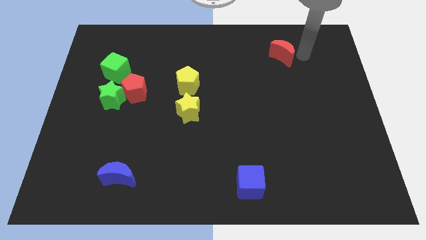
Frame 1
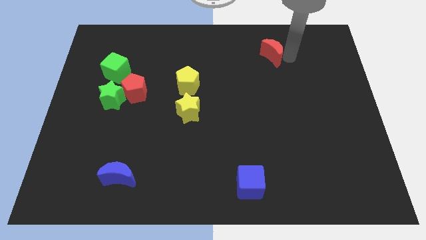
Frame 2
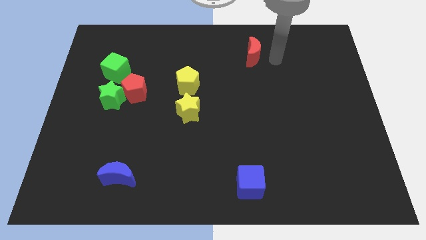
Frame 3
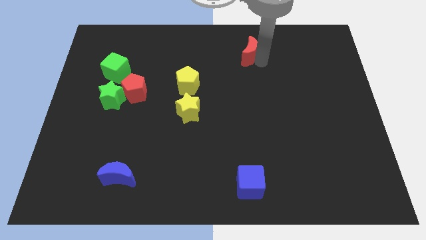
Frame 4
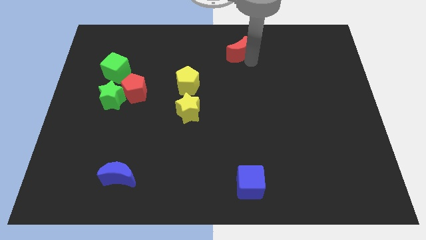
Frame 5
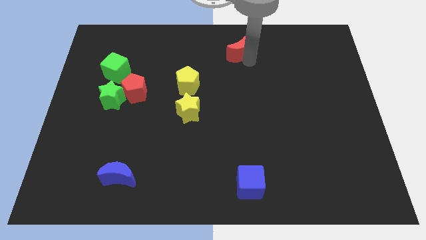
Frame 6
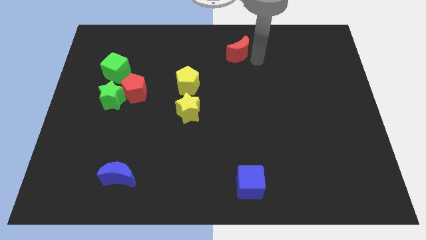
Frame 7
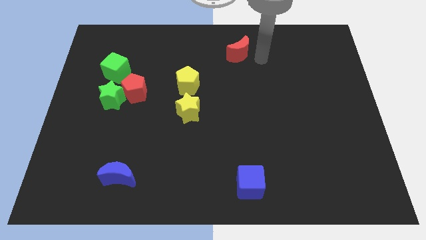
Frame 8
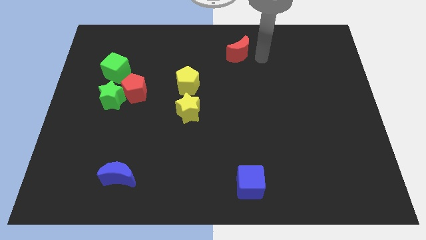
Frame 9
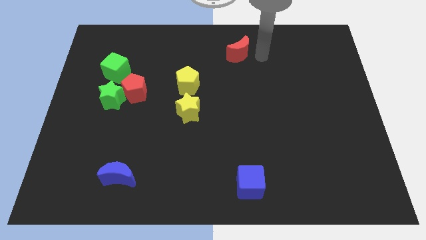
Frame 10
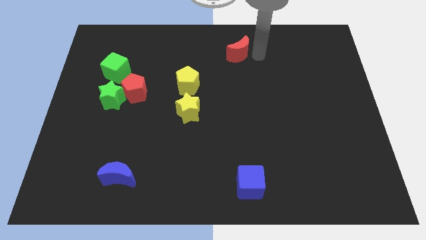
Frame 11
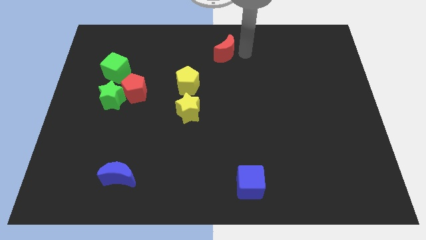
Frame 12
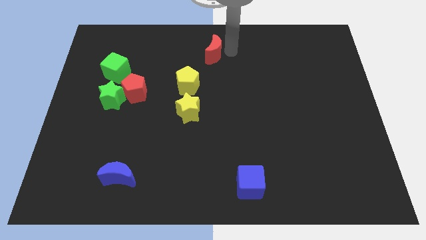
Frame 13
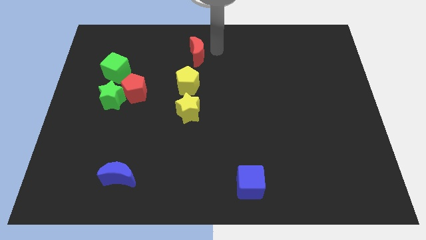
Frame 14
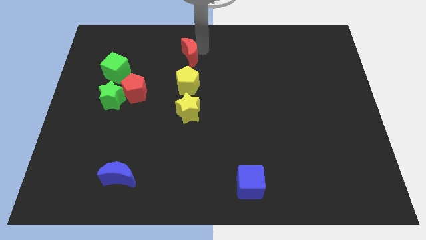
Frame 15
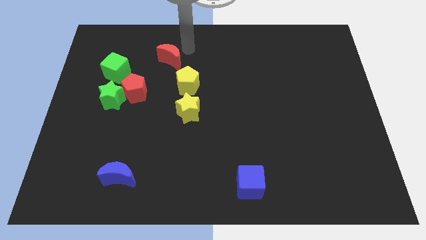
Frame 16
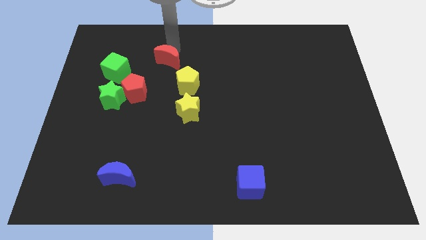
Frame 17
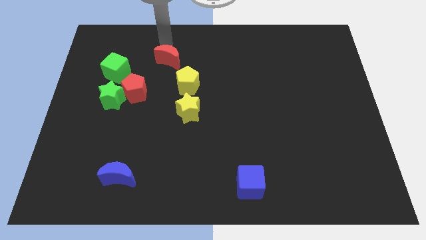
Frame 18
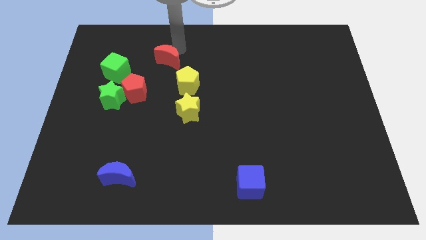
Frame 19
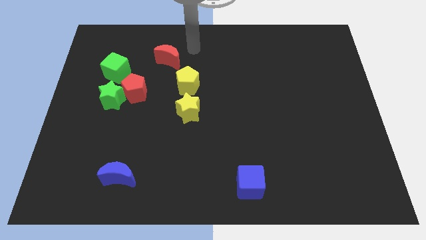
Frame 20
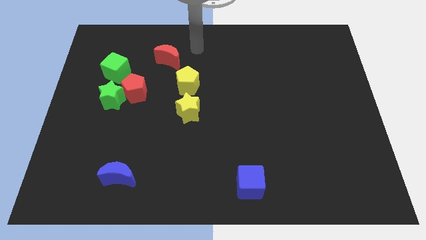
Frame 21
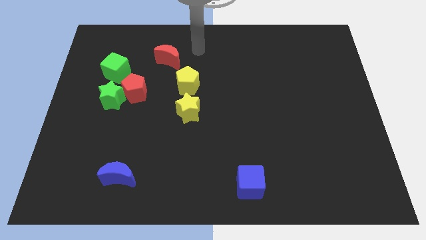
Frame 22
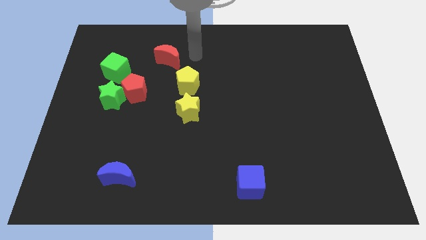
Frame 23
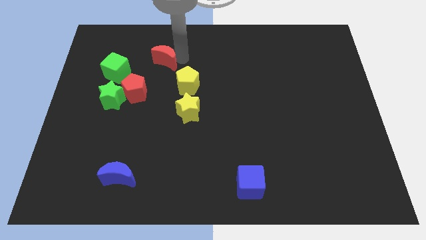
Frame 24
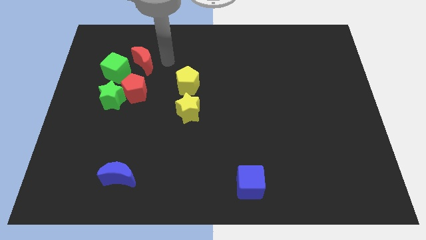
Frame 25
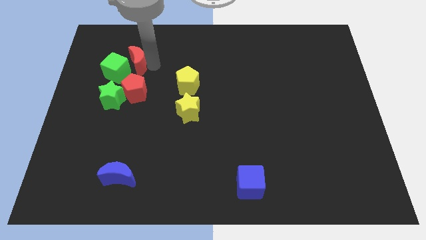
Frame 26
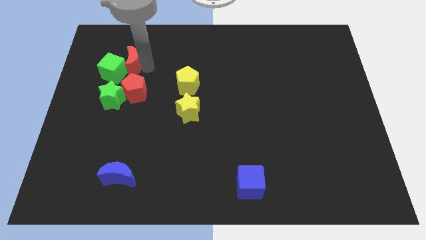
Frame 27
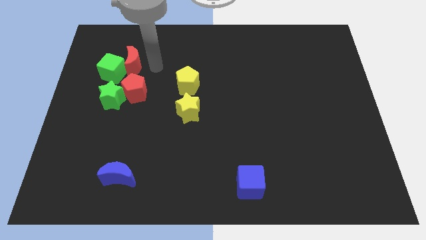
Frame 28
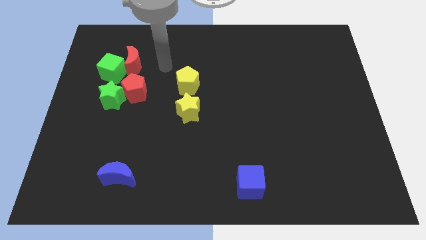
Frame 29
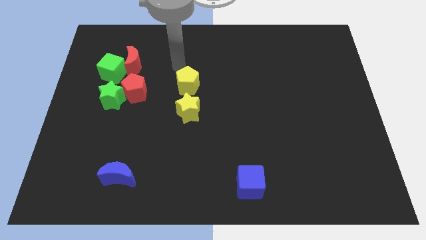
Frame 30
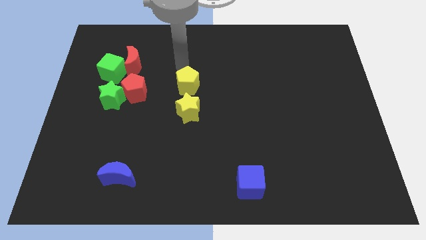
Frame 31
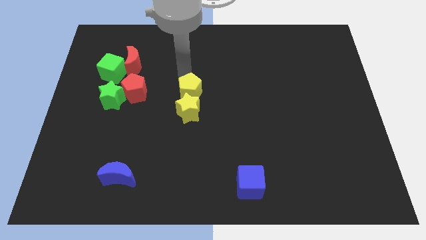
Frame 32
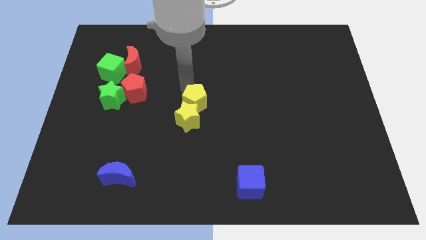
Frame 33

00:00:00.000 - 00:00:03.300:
push the red moon into the green cube

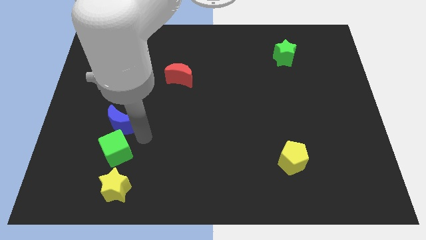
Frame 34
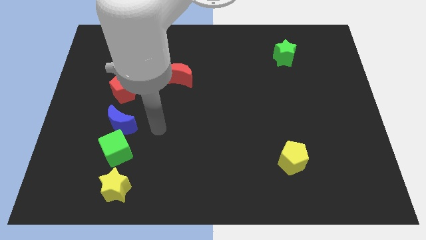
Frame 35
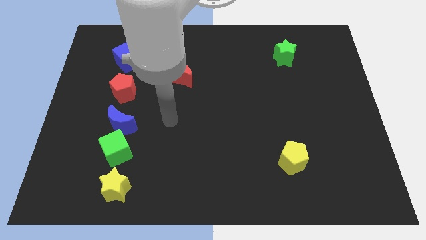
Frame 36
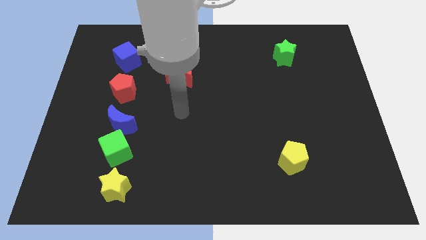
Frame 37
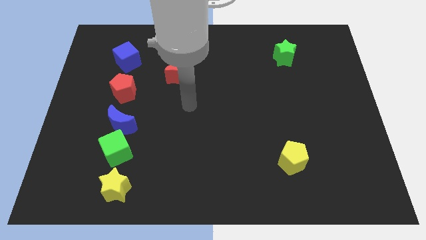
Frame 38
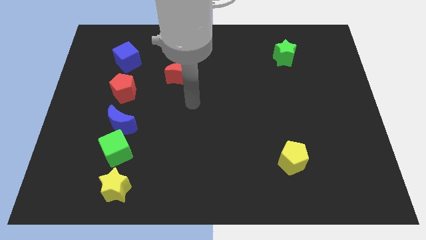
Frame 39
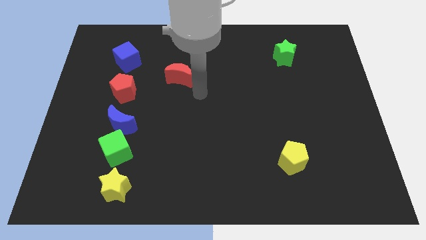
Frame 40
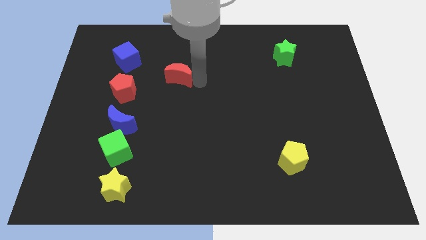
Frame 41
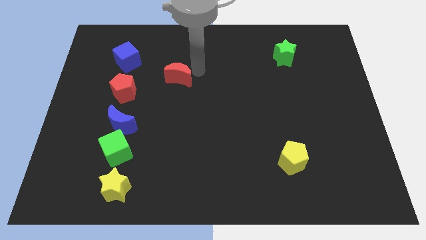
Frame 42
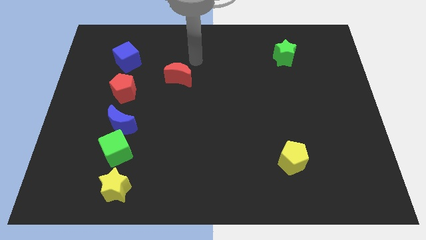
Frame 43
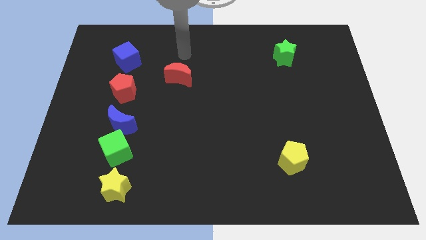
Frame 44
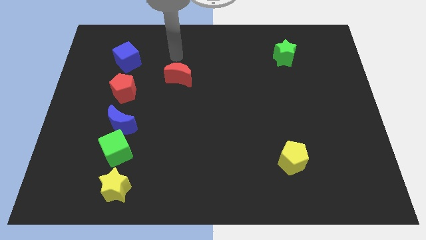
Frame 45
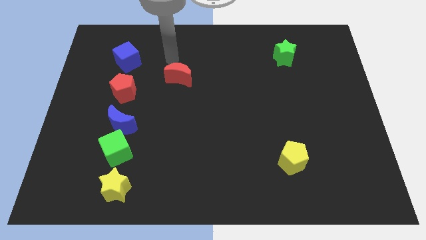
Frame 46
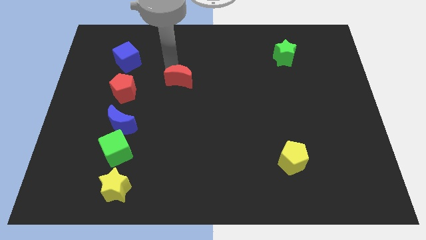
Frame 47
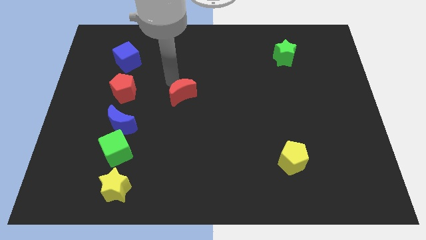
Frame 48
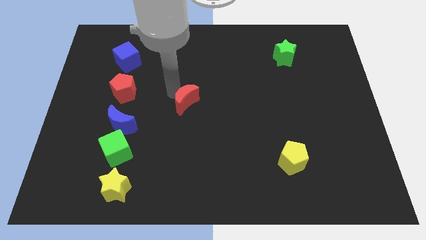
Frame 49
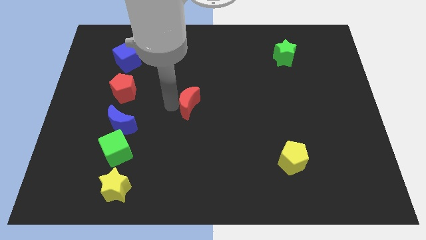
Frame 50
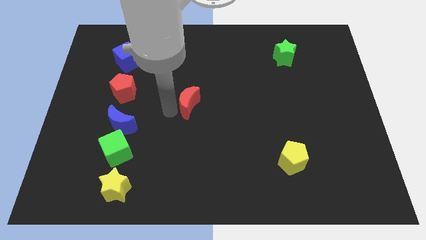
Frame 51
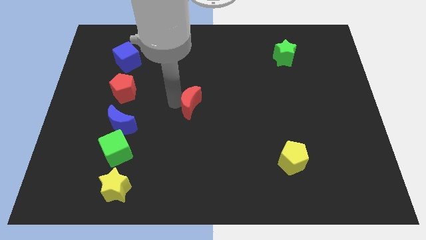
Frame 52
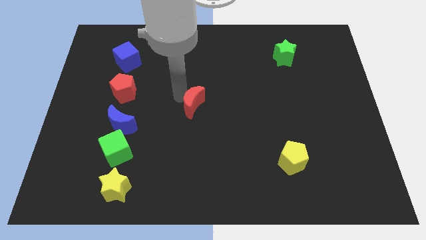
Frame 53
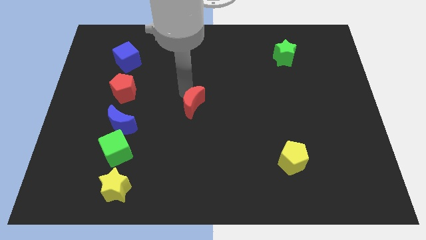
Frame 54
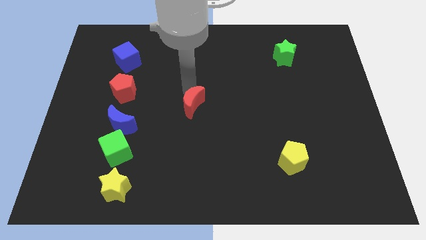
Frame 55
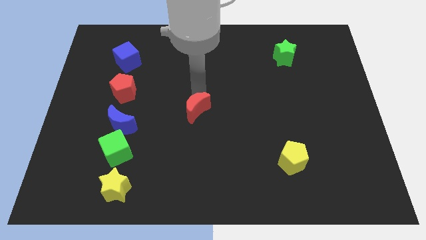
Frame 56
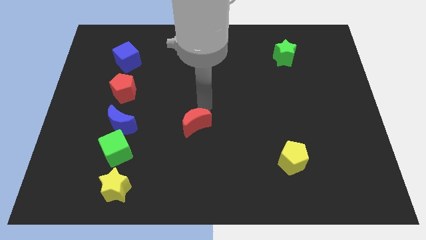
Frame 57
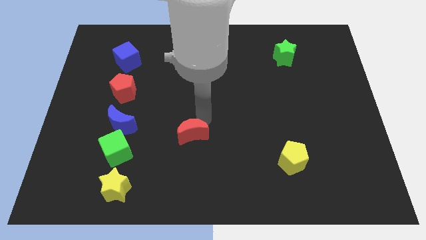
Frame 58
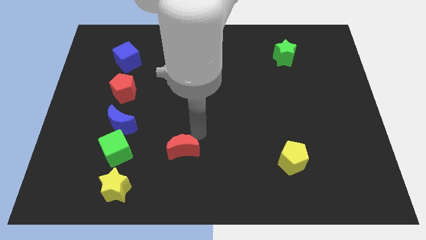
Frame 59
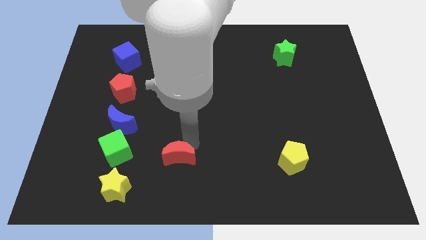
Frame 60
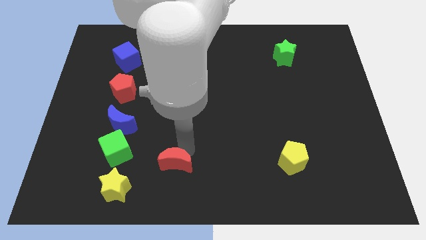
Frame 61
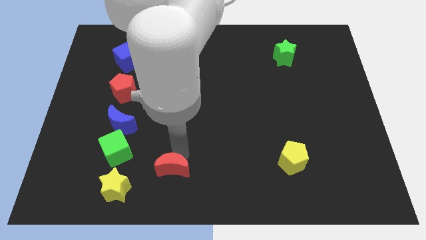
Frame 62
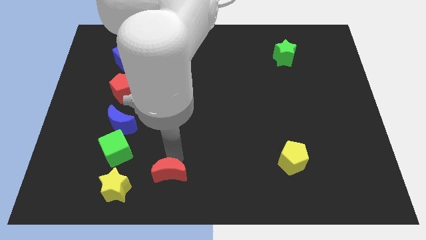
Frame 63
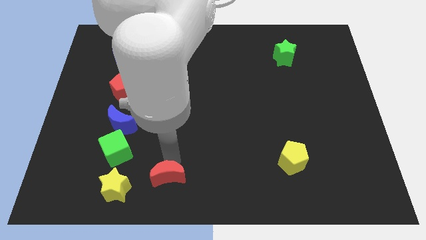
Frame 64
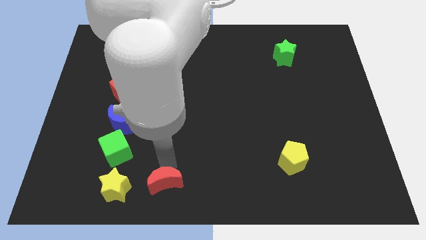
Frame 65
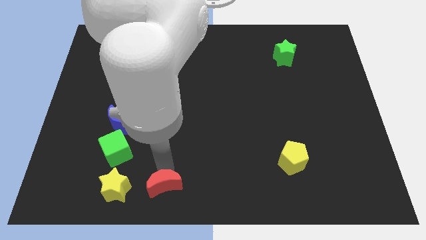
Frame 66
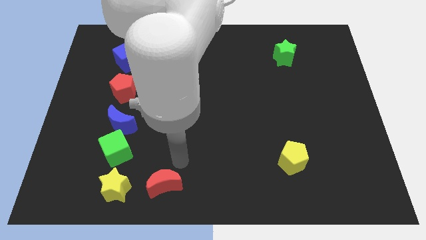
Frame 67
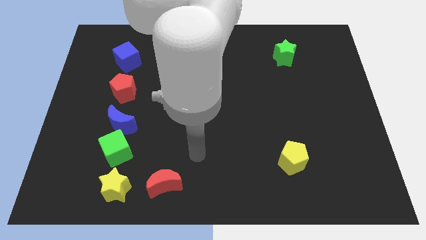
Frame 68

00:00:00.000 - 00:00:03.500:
place the red crescent to right of yellow star

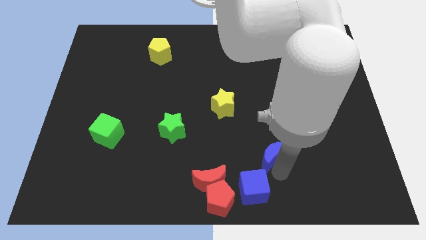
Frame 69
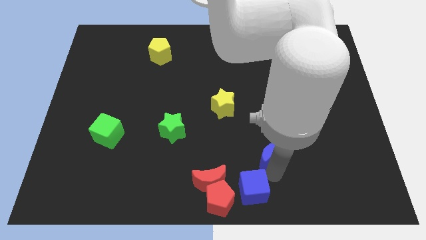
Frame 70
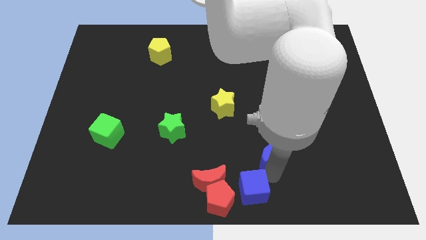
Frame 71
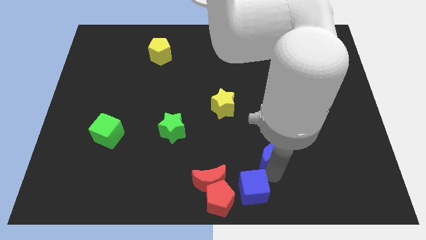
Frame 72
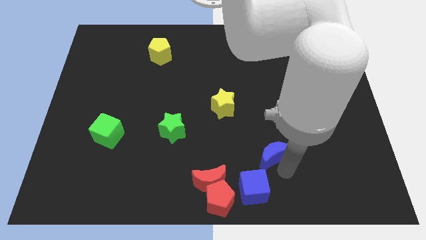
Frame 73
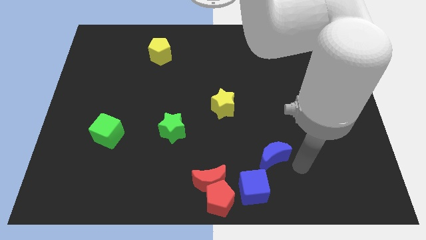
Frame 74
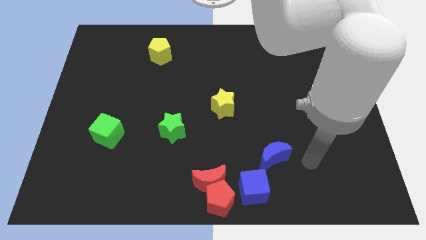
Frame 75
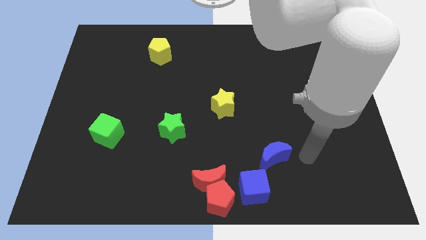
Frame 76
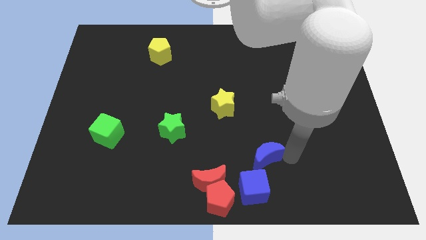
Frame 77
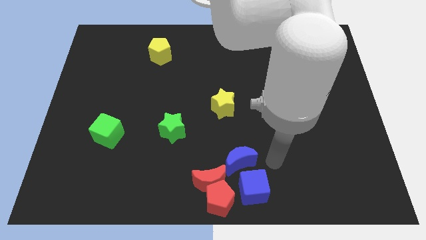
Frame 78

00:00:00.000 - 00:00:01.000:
place the blue moon above the blue cube

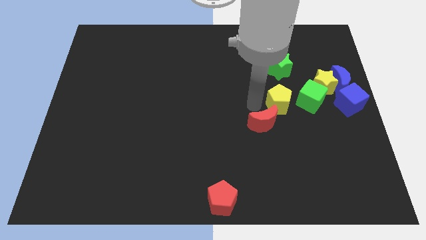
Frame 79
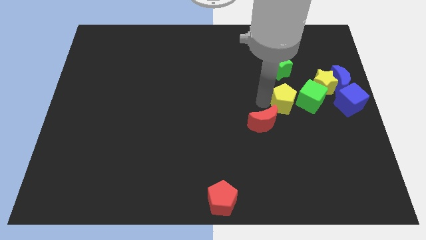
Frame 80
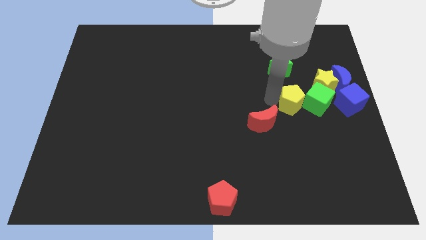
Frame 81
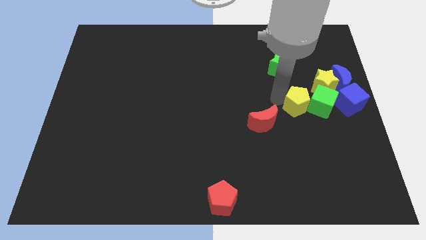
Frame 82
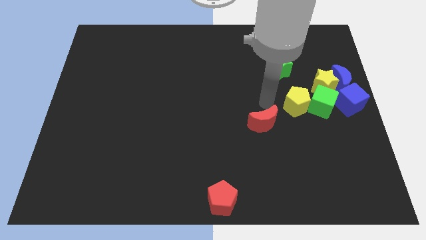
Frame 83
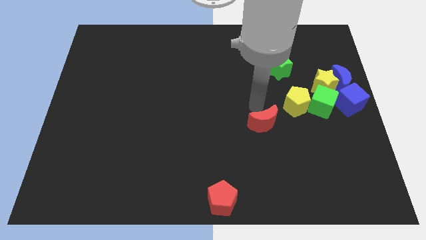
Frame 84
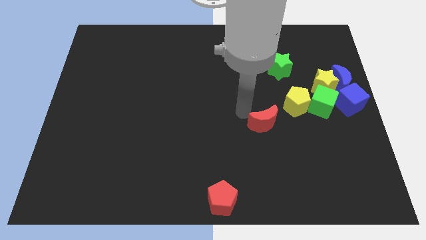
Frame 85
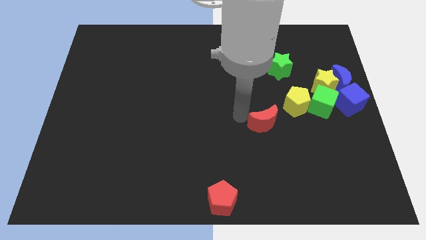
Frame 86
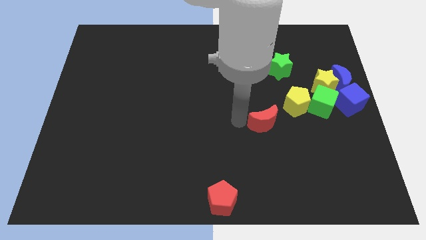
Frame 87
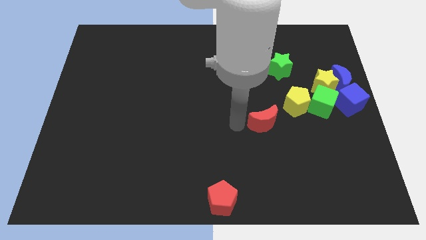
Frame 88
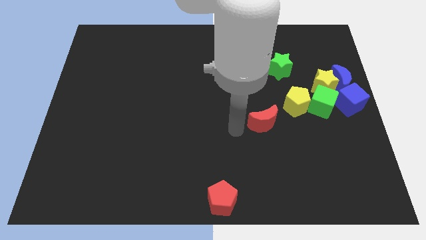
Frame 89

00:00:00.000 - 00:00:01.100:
push the yellow pentagon into the green cube

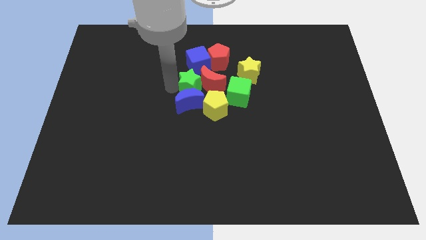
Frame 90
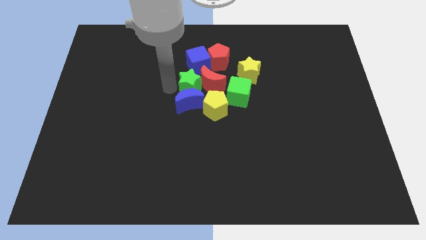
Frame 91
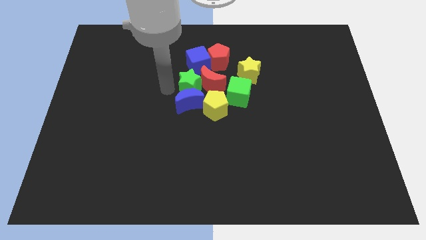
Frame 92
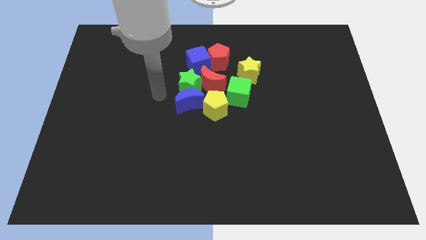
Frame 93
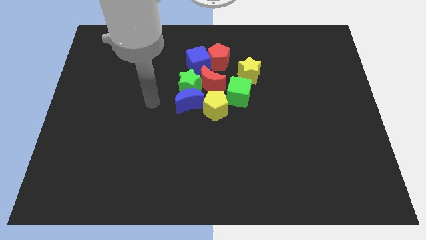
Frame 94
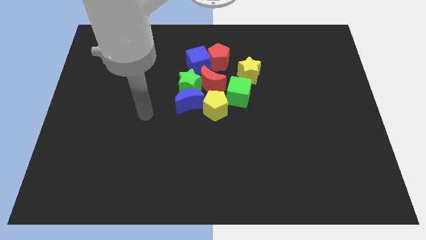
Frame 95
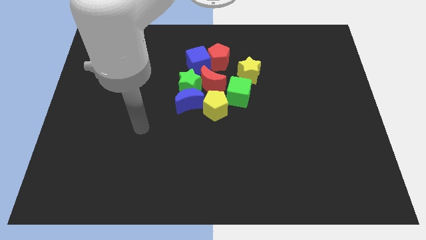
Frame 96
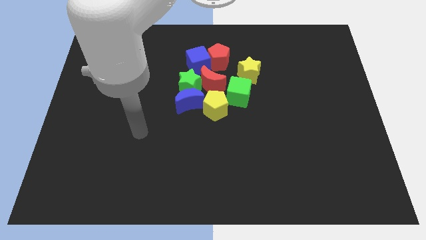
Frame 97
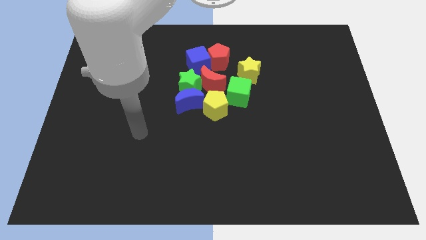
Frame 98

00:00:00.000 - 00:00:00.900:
move your arm to the center left of the board
